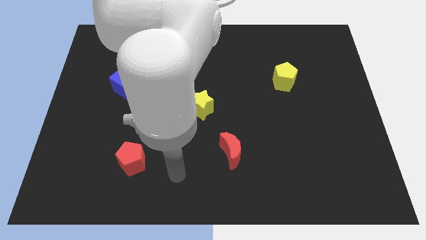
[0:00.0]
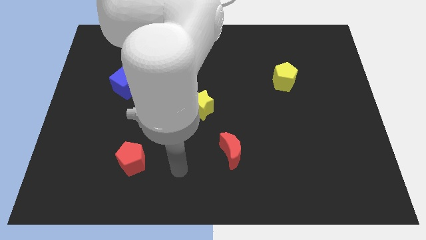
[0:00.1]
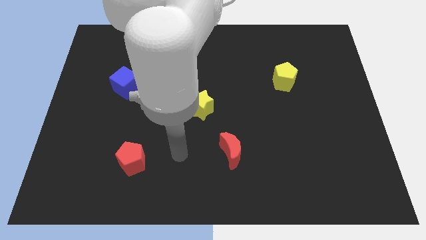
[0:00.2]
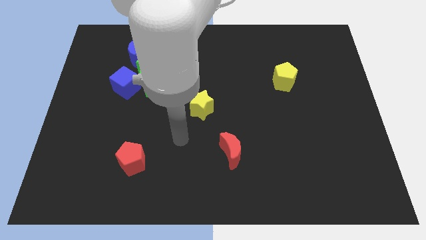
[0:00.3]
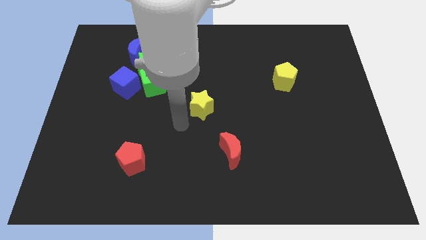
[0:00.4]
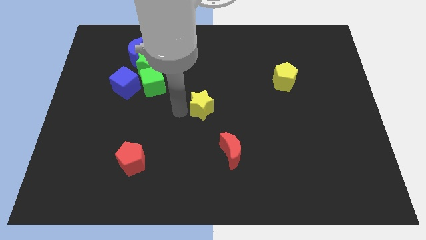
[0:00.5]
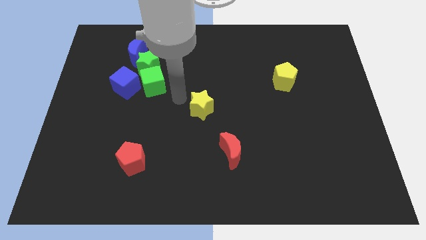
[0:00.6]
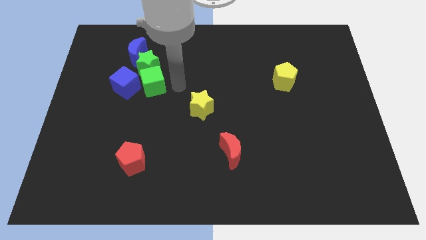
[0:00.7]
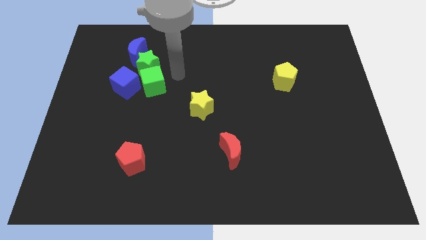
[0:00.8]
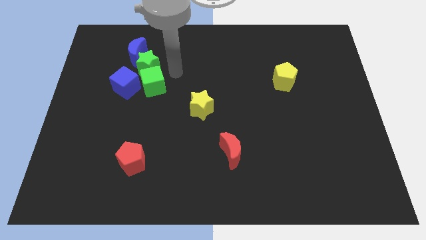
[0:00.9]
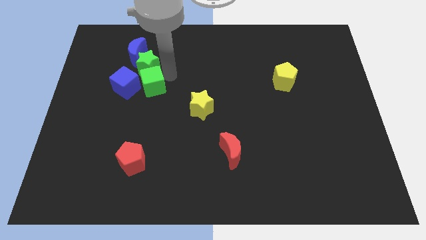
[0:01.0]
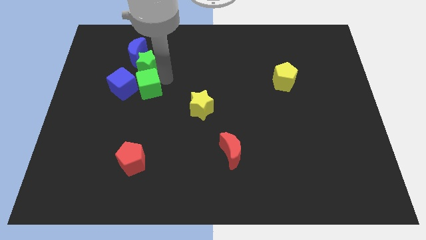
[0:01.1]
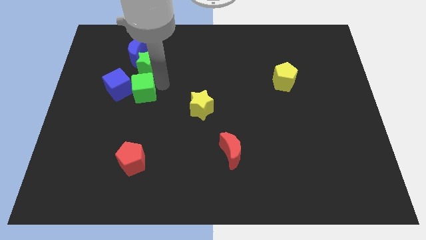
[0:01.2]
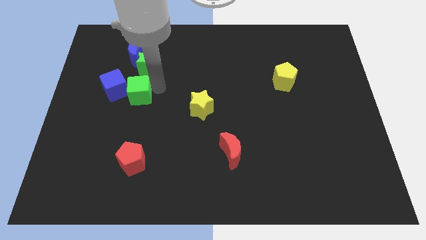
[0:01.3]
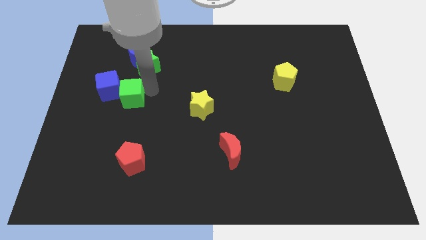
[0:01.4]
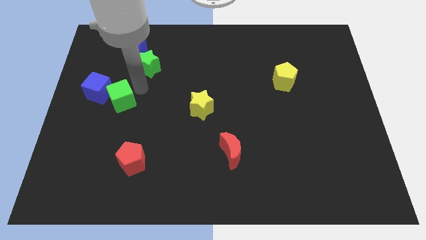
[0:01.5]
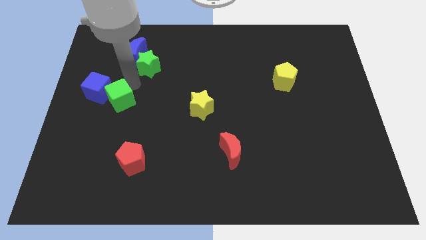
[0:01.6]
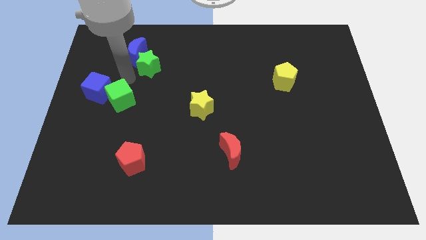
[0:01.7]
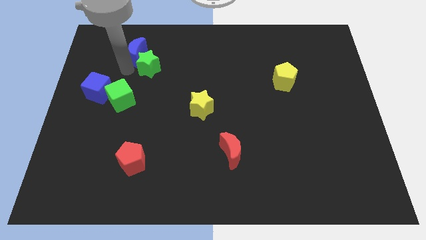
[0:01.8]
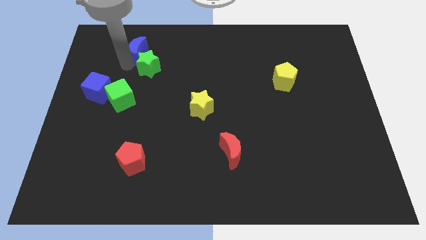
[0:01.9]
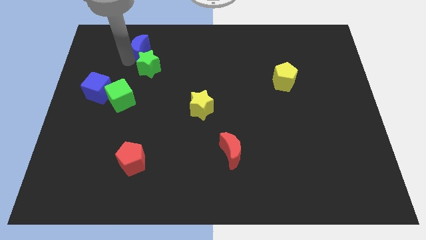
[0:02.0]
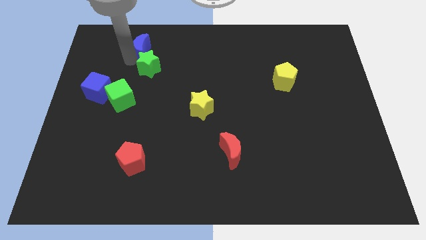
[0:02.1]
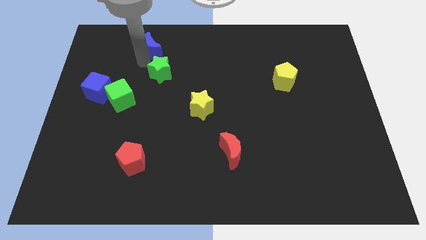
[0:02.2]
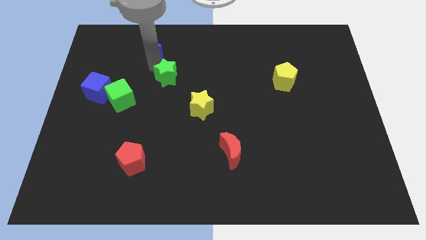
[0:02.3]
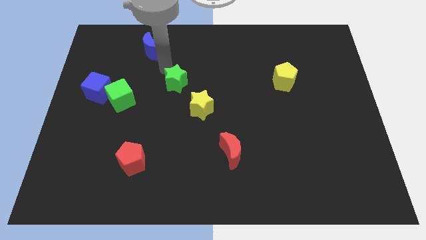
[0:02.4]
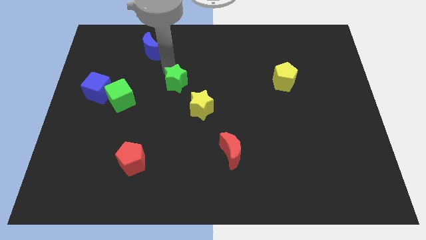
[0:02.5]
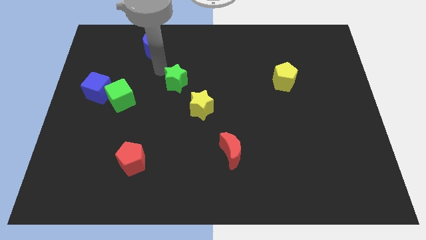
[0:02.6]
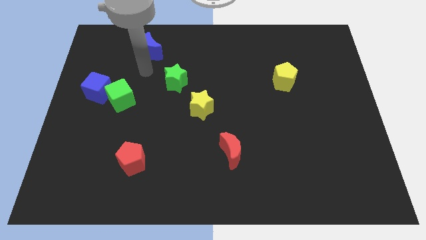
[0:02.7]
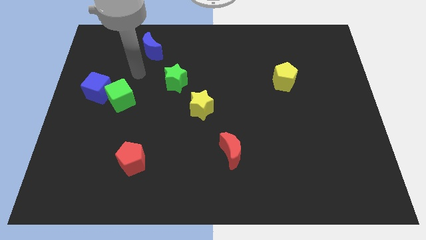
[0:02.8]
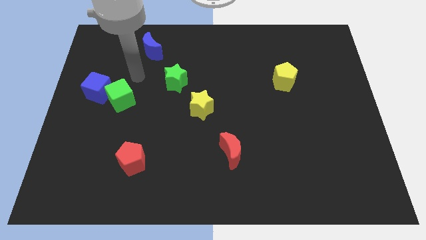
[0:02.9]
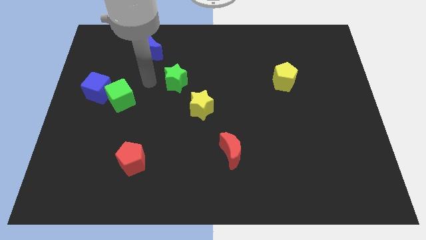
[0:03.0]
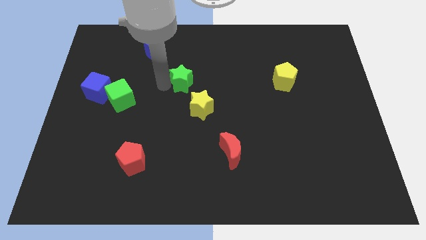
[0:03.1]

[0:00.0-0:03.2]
place the green star diagonally in between the blue moon and yellow star

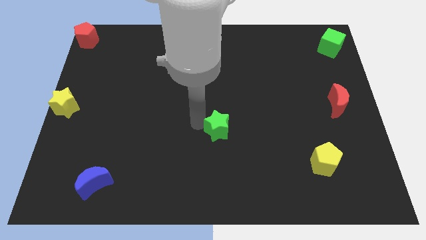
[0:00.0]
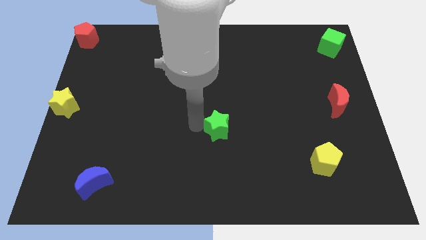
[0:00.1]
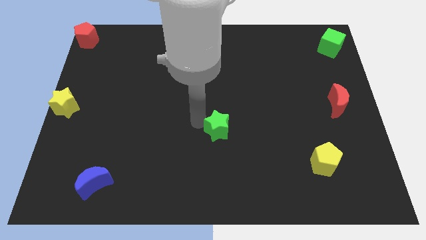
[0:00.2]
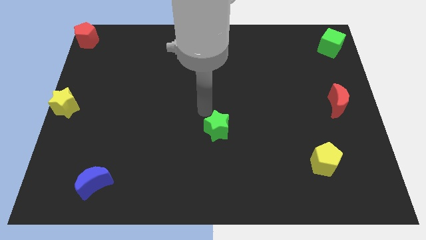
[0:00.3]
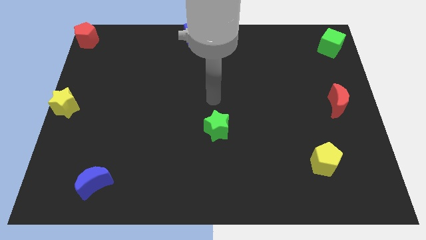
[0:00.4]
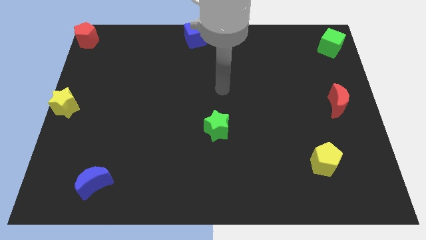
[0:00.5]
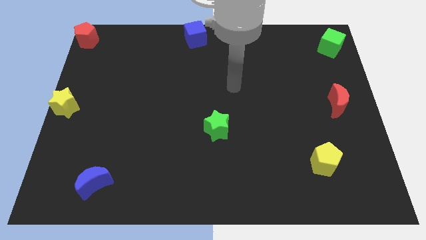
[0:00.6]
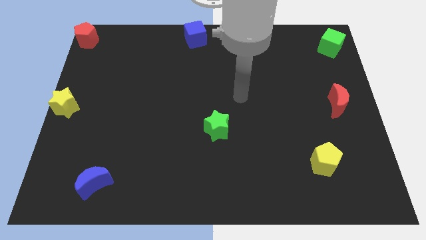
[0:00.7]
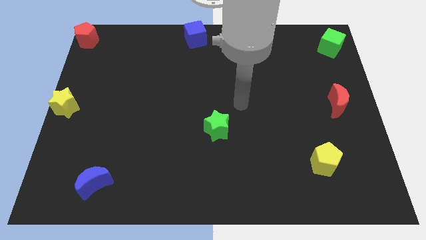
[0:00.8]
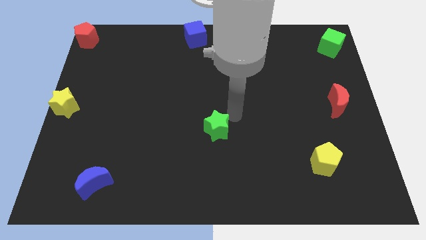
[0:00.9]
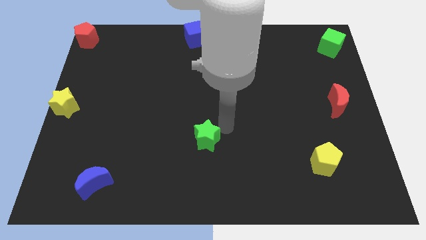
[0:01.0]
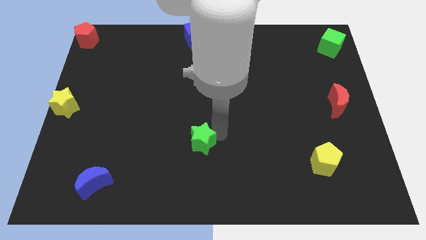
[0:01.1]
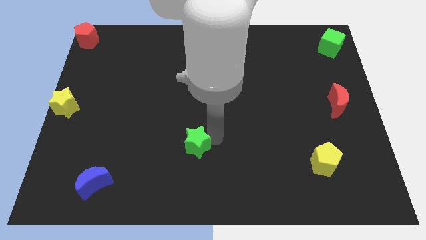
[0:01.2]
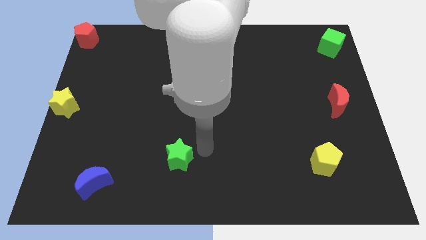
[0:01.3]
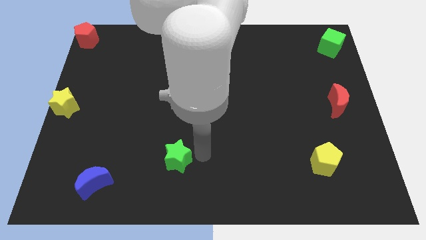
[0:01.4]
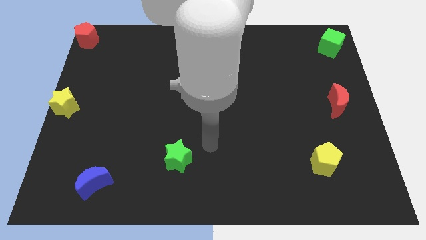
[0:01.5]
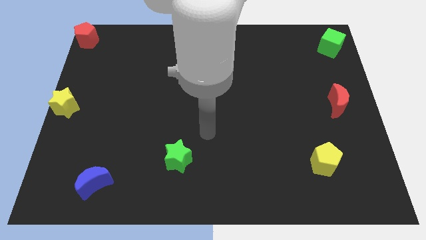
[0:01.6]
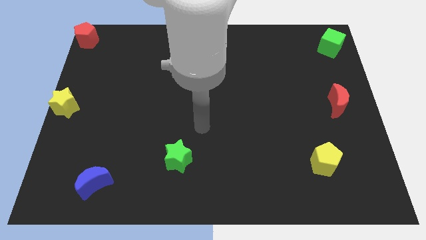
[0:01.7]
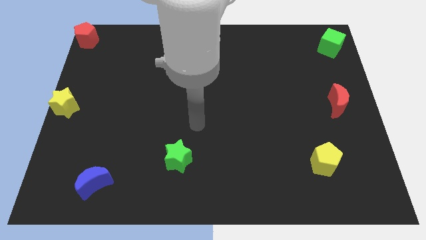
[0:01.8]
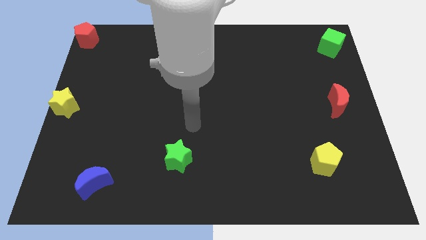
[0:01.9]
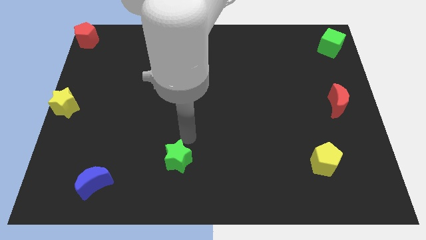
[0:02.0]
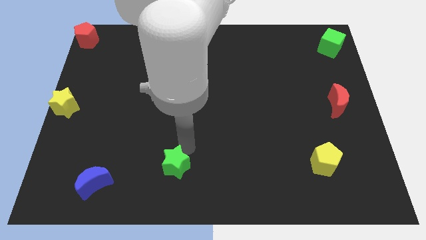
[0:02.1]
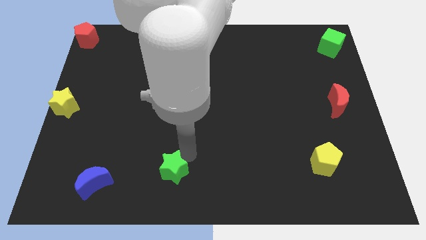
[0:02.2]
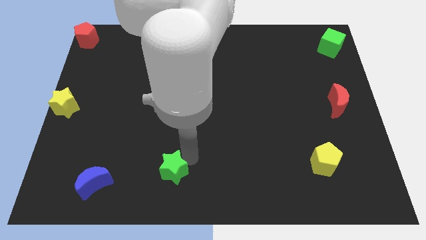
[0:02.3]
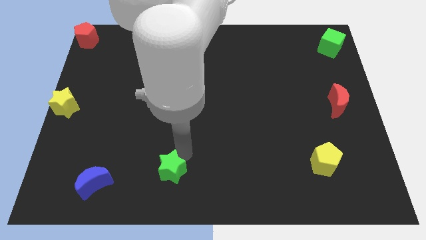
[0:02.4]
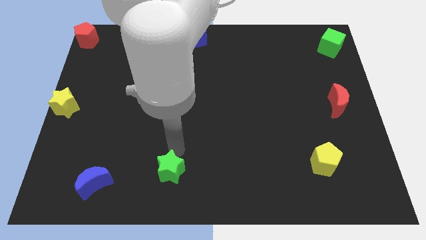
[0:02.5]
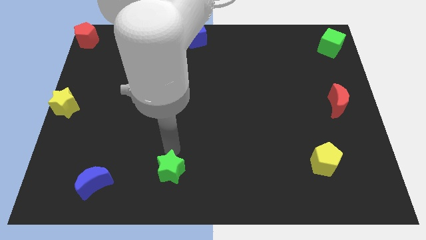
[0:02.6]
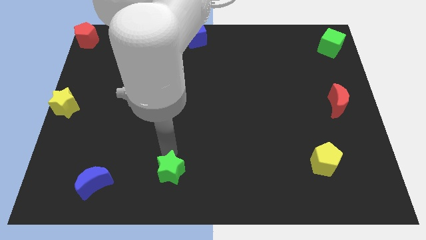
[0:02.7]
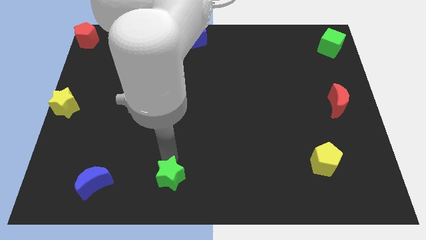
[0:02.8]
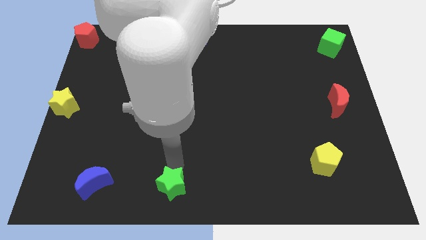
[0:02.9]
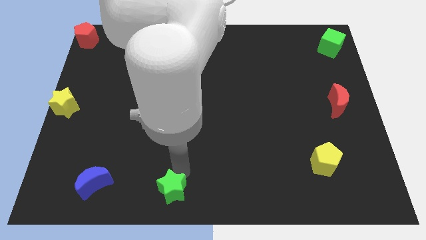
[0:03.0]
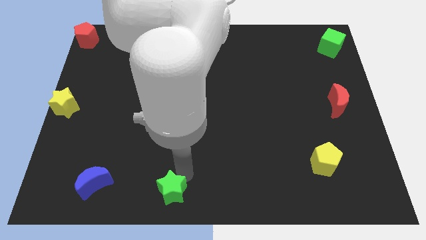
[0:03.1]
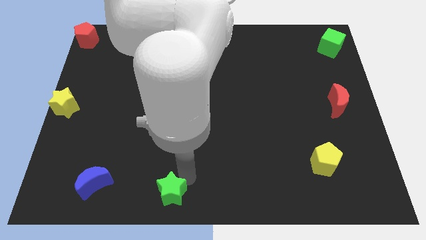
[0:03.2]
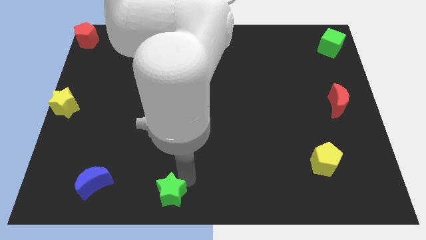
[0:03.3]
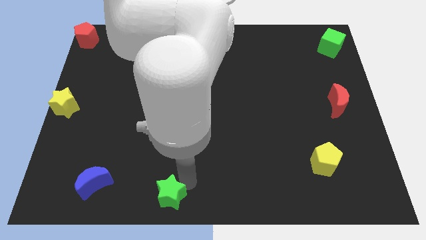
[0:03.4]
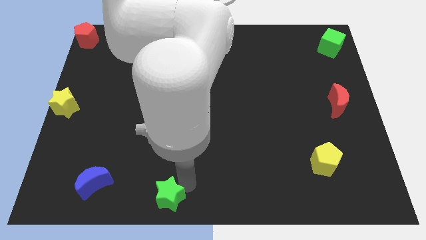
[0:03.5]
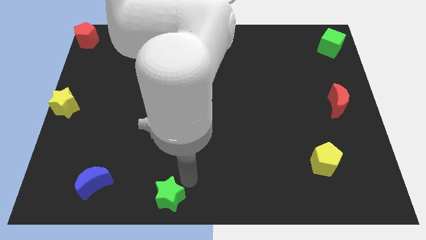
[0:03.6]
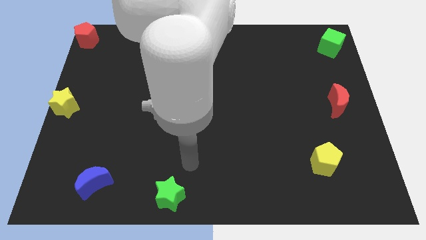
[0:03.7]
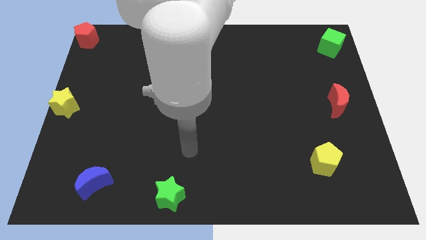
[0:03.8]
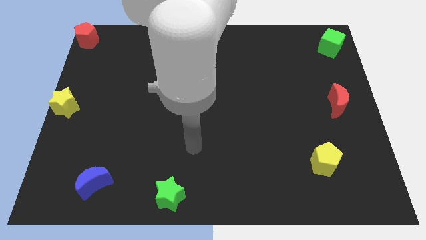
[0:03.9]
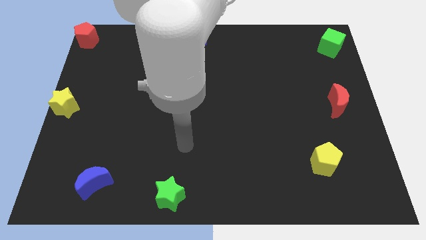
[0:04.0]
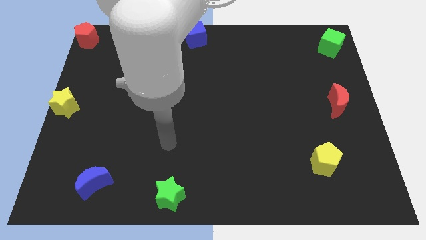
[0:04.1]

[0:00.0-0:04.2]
place green star to the bottom side of the board

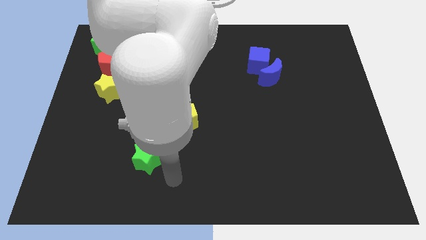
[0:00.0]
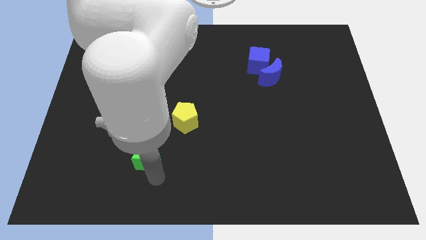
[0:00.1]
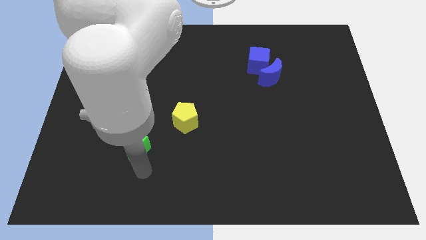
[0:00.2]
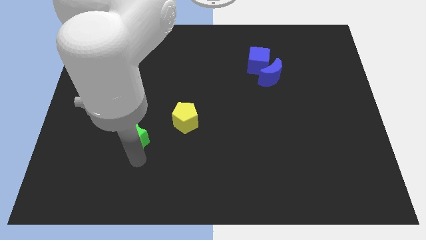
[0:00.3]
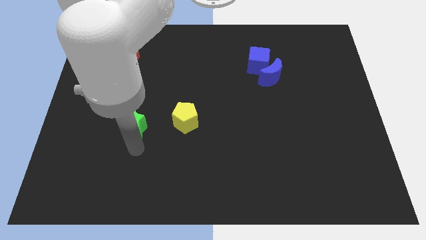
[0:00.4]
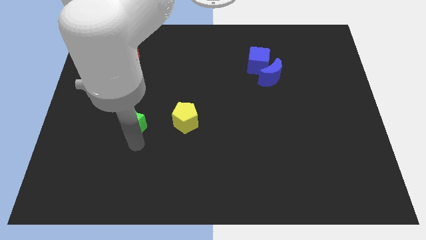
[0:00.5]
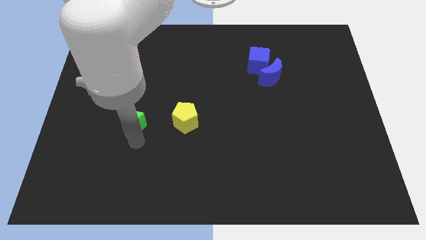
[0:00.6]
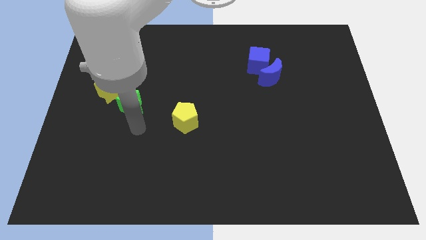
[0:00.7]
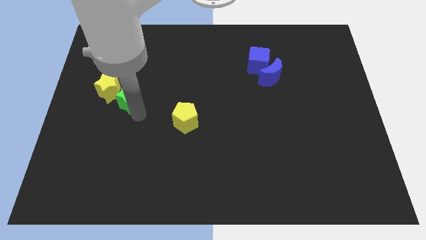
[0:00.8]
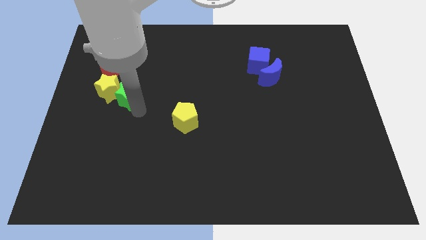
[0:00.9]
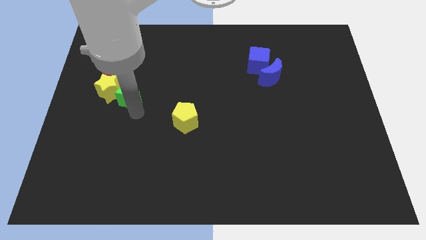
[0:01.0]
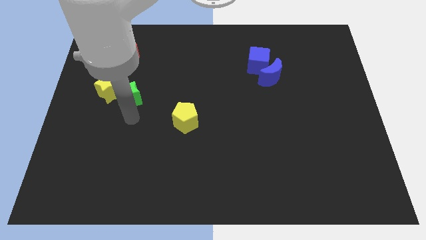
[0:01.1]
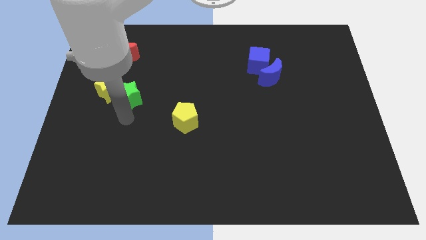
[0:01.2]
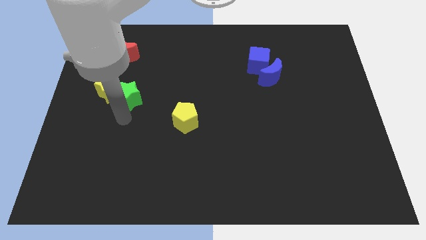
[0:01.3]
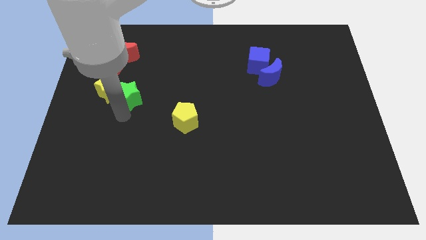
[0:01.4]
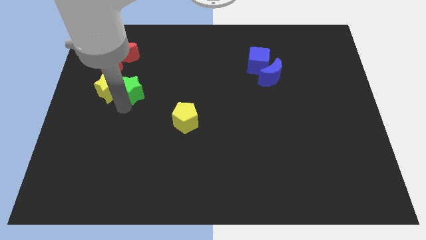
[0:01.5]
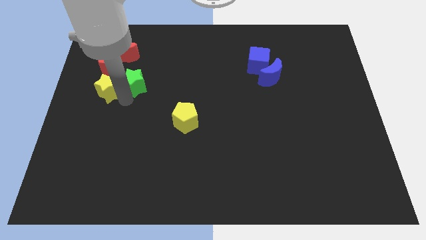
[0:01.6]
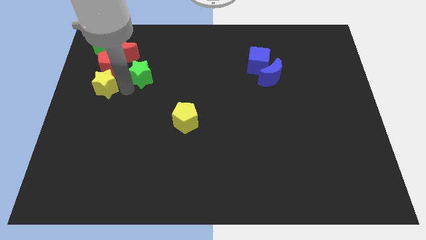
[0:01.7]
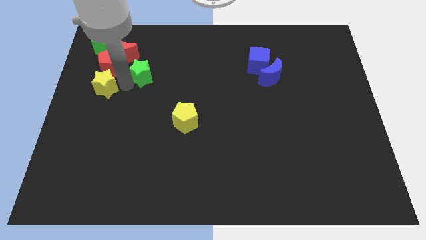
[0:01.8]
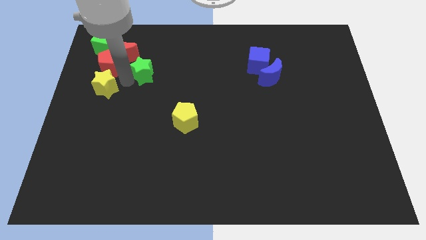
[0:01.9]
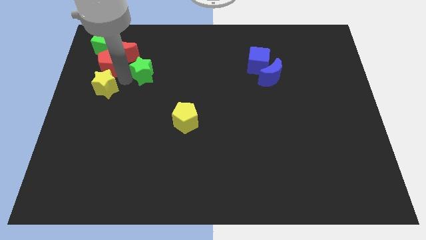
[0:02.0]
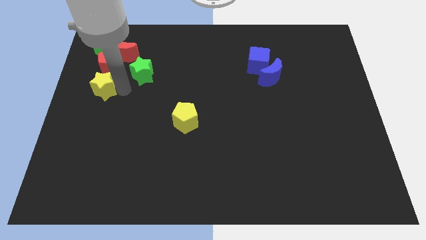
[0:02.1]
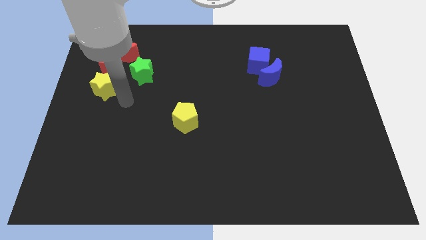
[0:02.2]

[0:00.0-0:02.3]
push the green star to the bottom right of red pentagon
